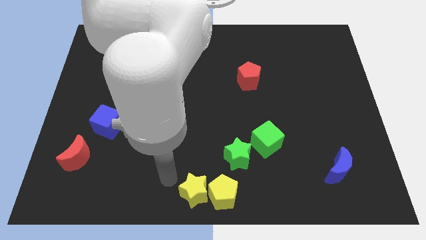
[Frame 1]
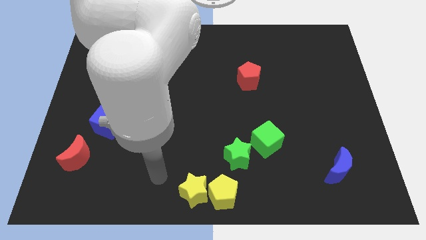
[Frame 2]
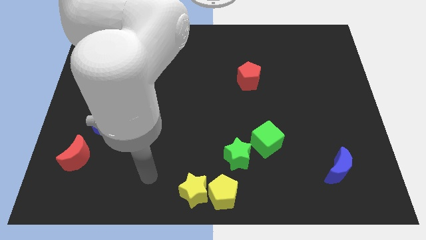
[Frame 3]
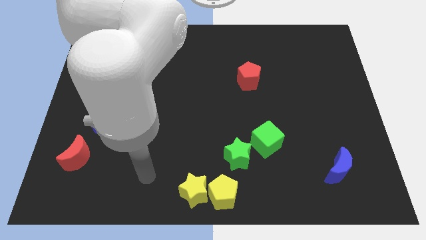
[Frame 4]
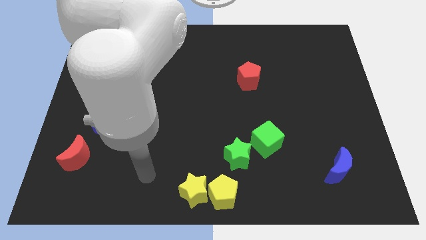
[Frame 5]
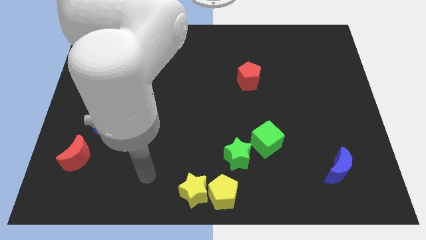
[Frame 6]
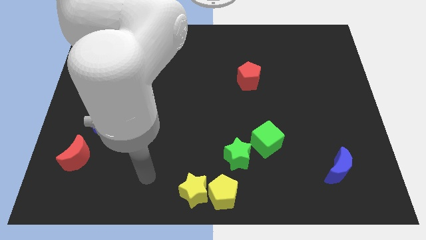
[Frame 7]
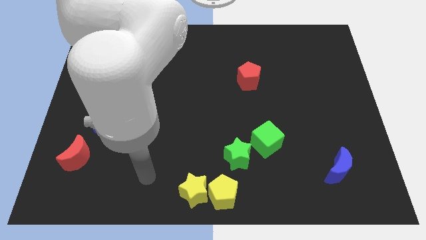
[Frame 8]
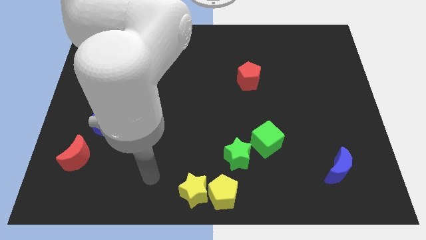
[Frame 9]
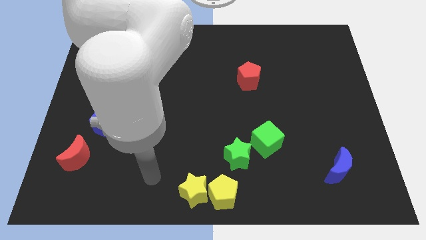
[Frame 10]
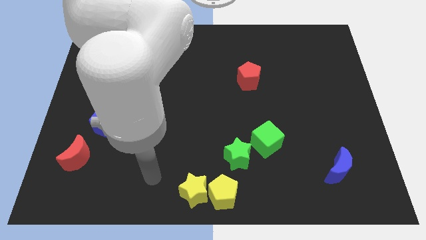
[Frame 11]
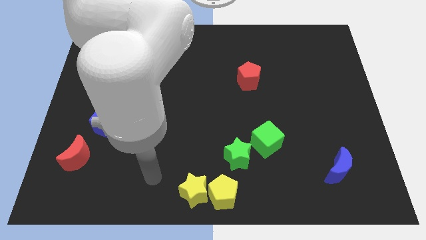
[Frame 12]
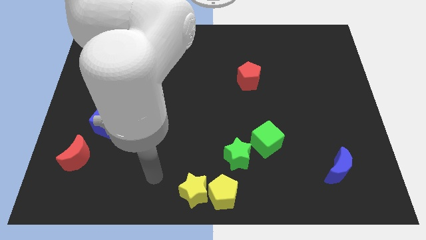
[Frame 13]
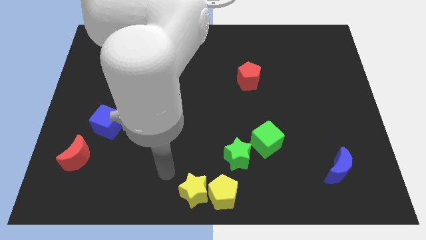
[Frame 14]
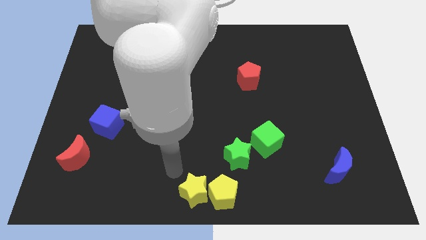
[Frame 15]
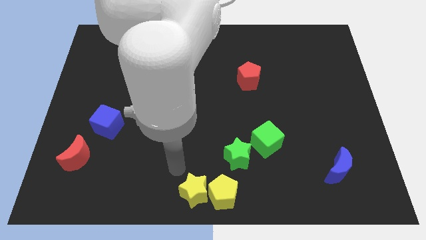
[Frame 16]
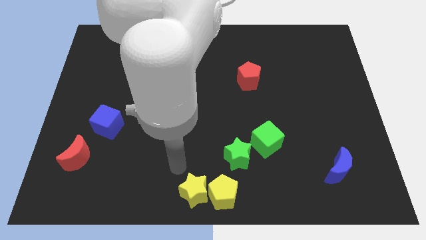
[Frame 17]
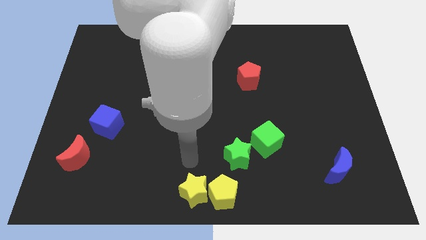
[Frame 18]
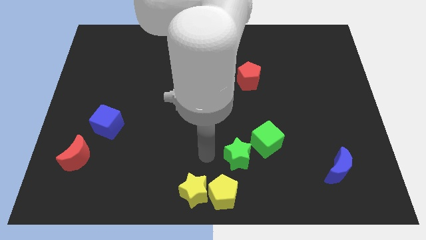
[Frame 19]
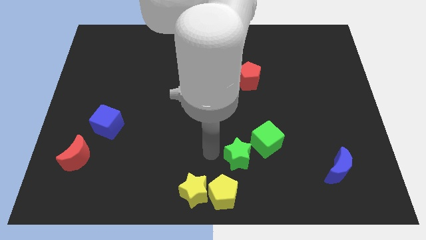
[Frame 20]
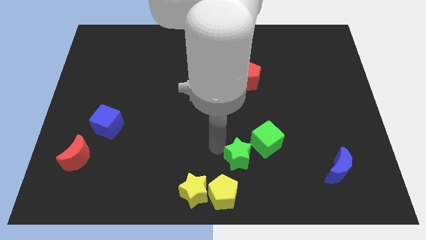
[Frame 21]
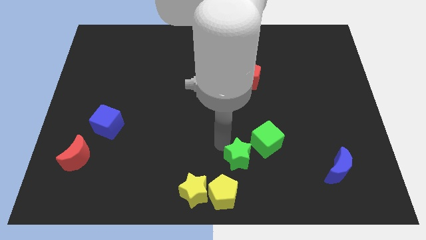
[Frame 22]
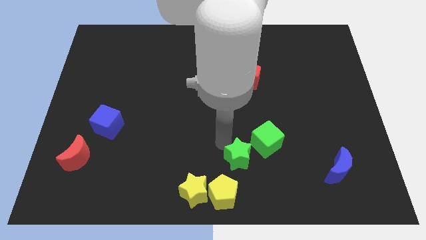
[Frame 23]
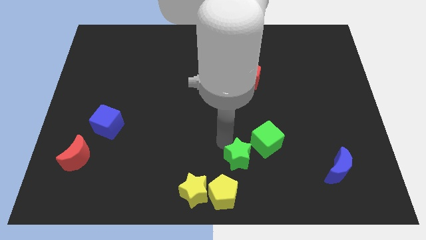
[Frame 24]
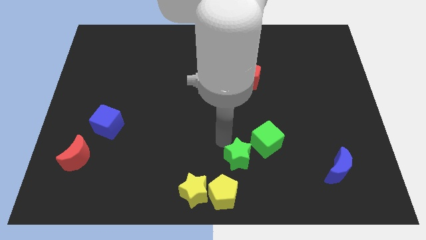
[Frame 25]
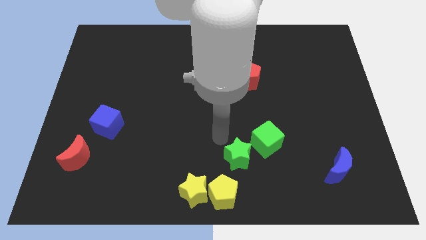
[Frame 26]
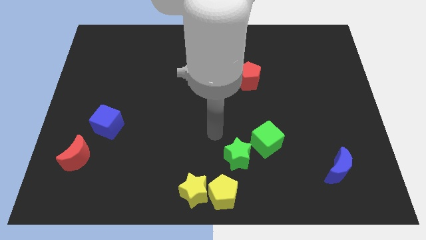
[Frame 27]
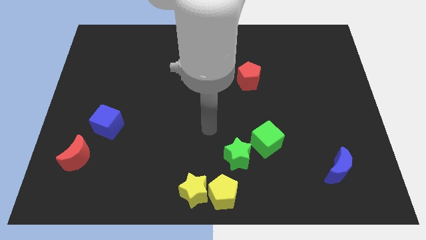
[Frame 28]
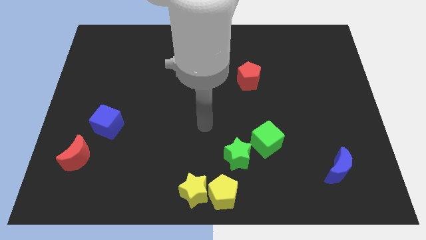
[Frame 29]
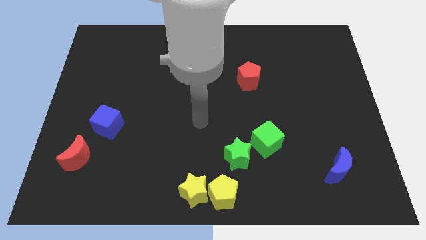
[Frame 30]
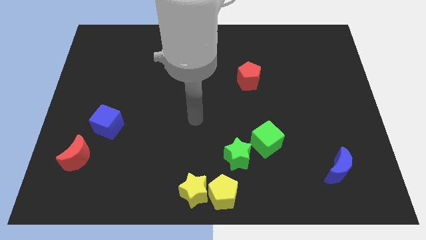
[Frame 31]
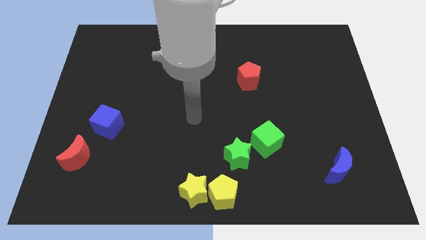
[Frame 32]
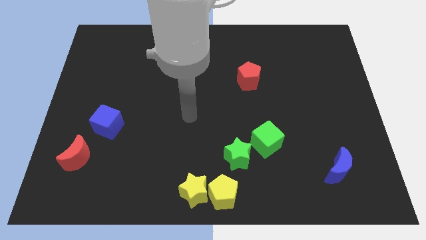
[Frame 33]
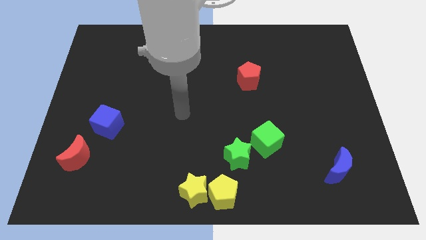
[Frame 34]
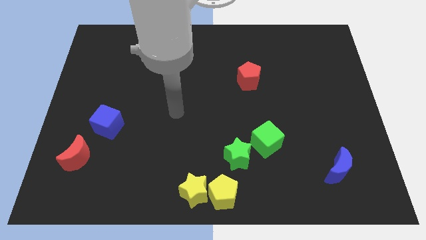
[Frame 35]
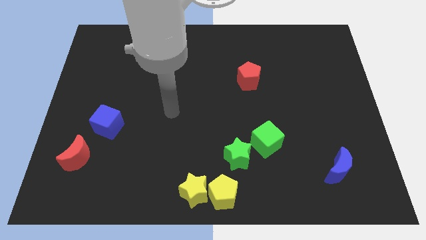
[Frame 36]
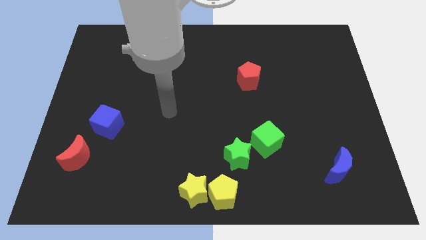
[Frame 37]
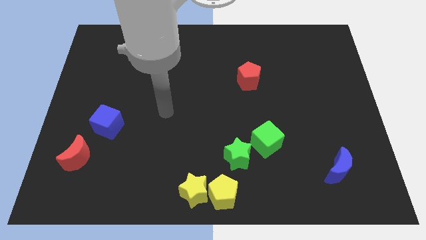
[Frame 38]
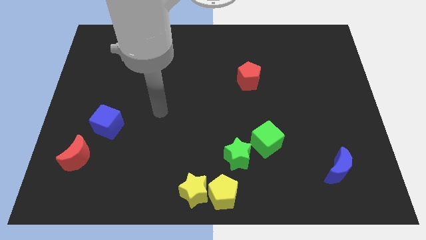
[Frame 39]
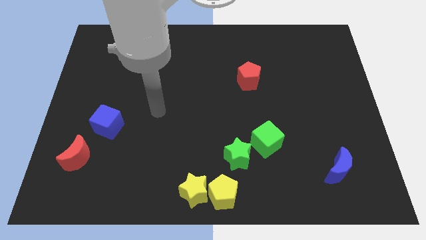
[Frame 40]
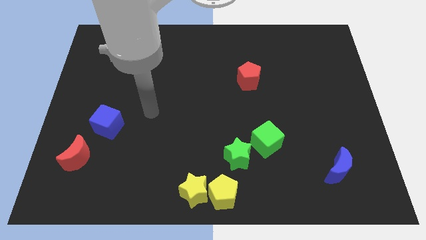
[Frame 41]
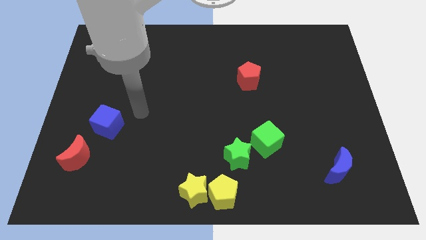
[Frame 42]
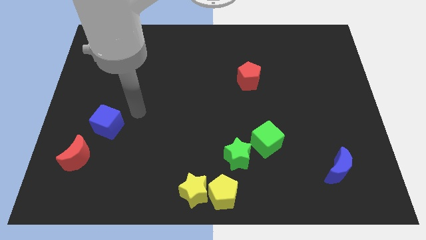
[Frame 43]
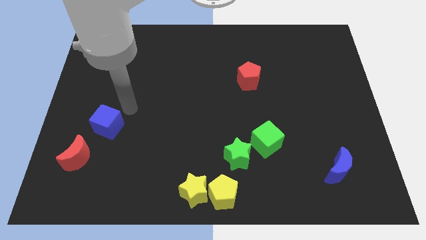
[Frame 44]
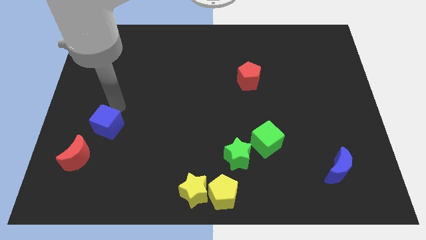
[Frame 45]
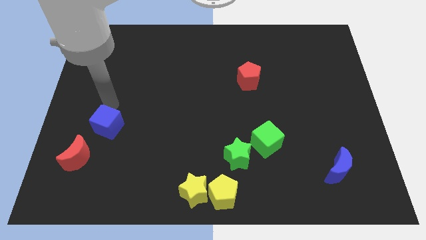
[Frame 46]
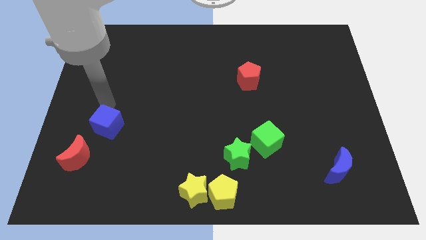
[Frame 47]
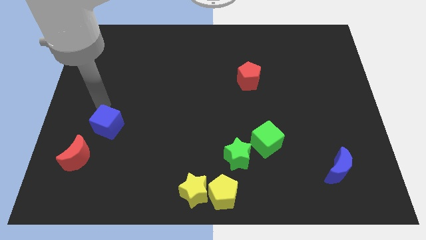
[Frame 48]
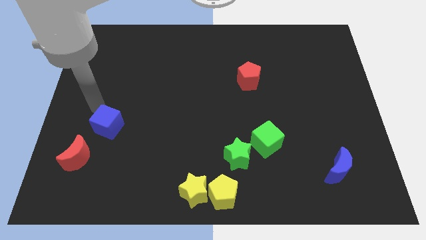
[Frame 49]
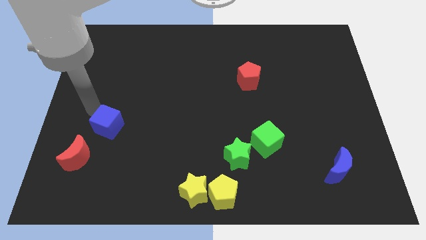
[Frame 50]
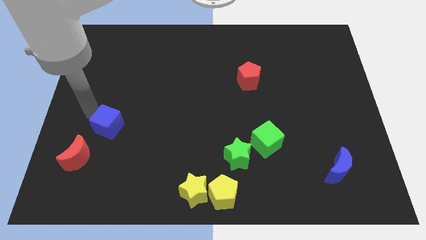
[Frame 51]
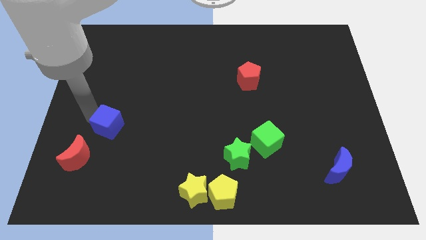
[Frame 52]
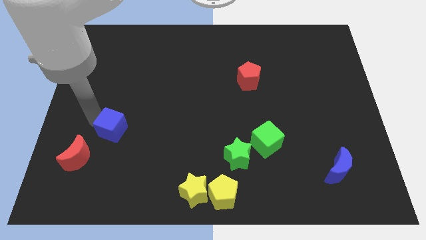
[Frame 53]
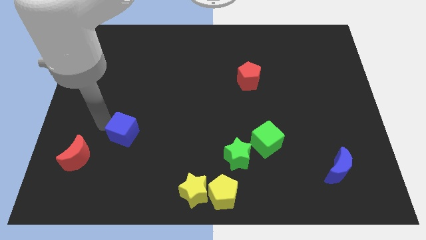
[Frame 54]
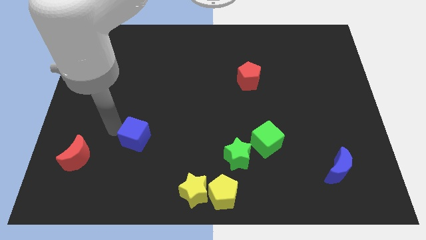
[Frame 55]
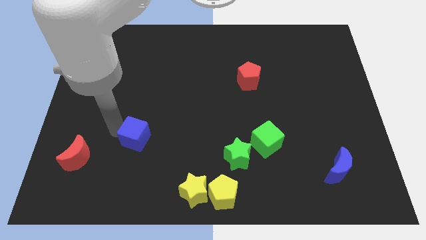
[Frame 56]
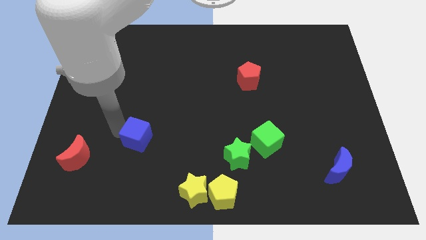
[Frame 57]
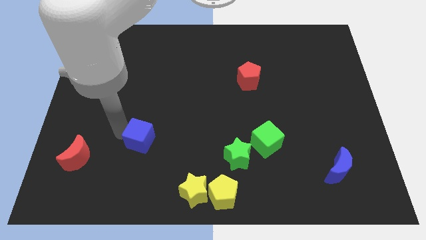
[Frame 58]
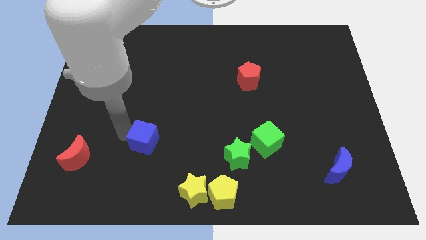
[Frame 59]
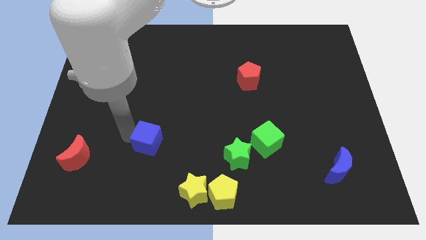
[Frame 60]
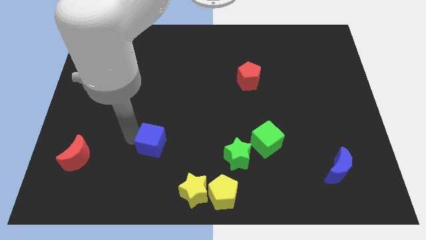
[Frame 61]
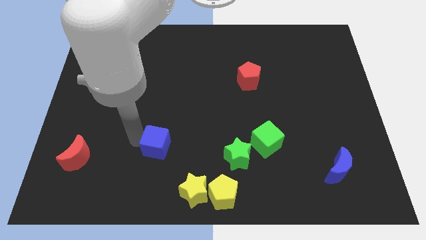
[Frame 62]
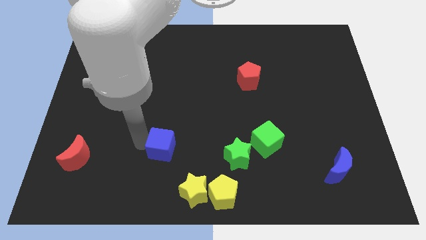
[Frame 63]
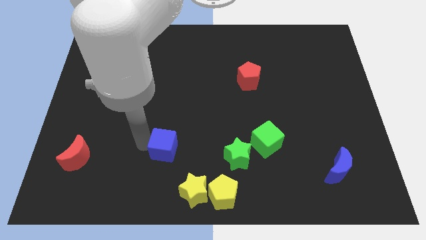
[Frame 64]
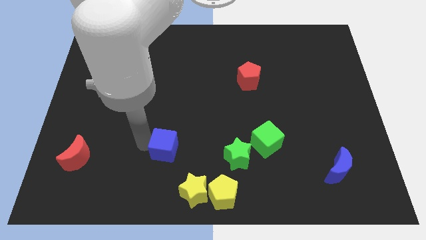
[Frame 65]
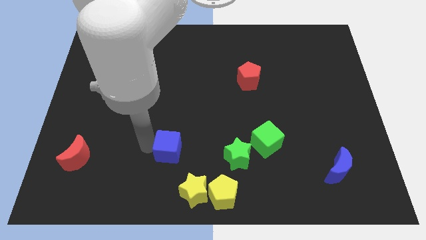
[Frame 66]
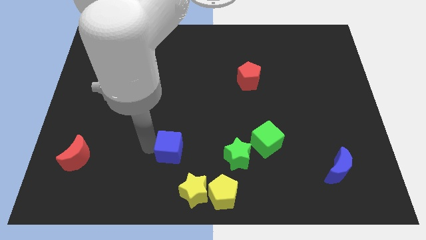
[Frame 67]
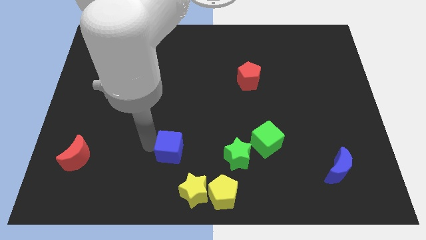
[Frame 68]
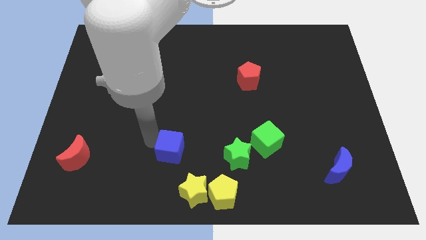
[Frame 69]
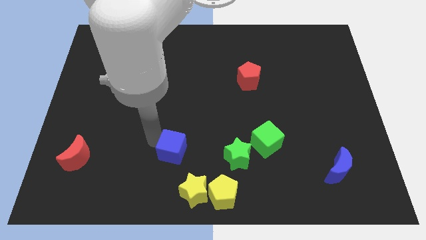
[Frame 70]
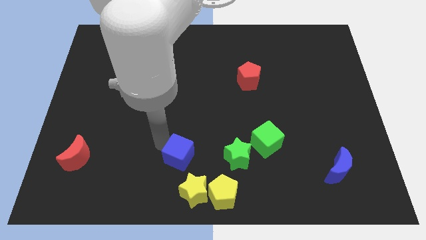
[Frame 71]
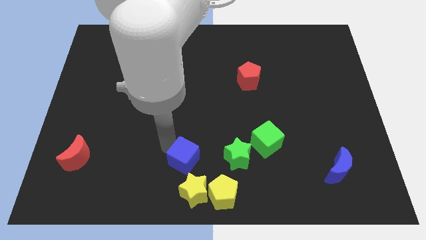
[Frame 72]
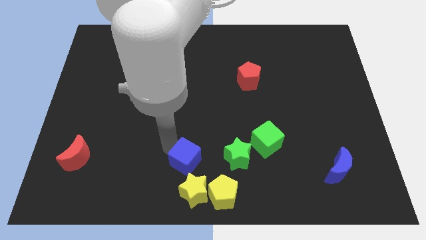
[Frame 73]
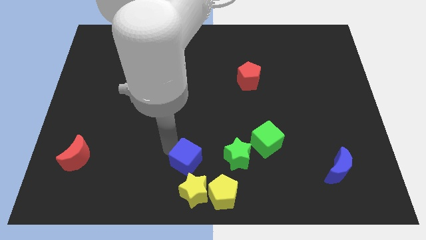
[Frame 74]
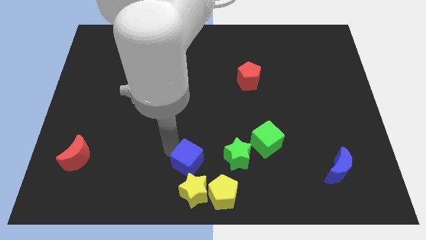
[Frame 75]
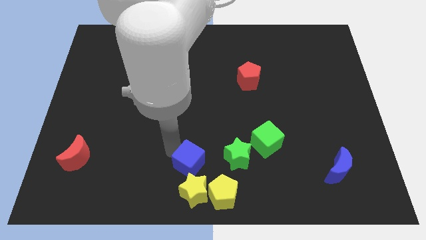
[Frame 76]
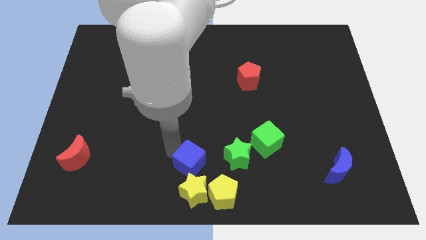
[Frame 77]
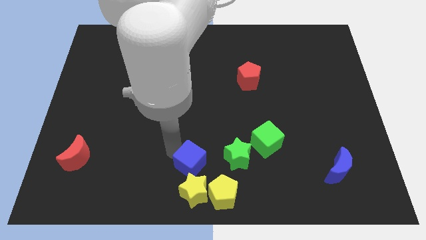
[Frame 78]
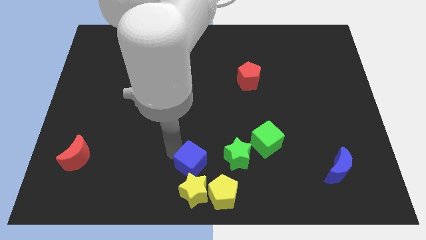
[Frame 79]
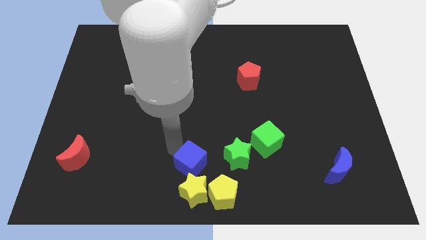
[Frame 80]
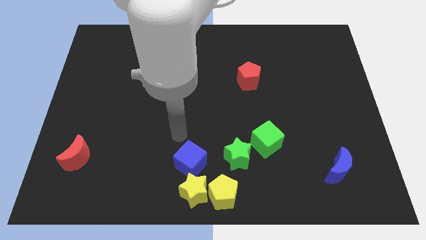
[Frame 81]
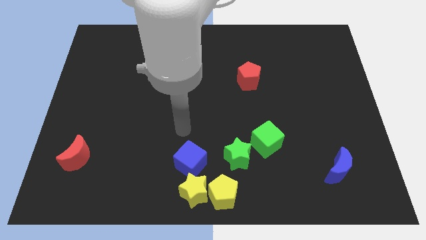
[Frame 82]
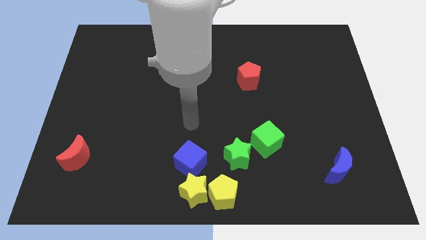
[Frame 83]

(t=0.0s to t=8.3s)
place the blue cube above the yellow star

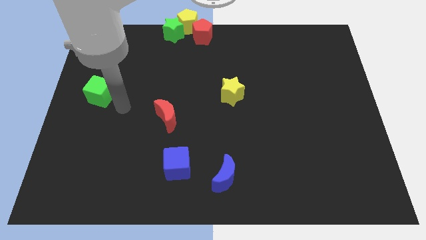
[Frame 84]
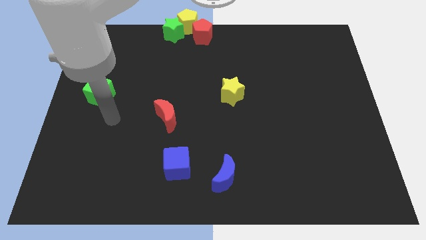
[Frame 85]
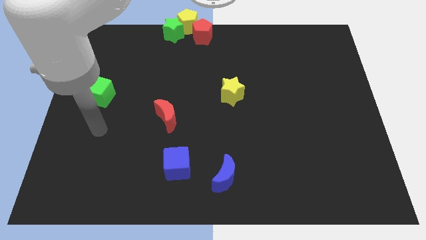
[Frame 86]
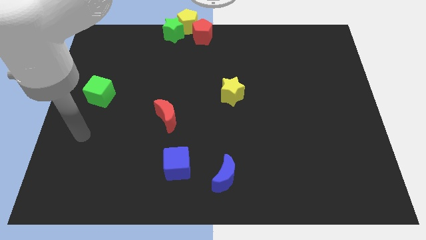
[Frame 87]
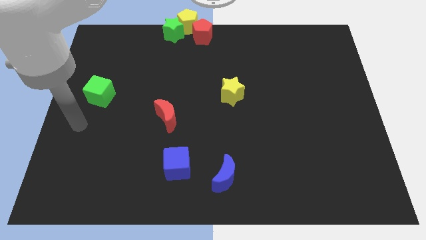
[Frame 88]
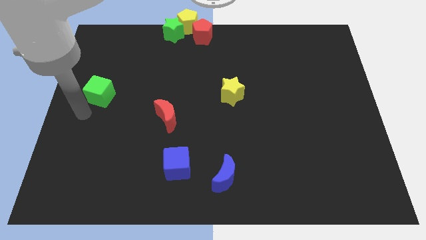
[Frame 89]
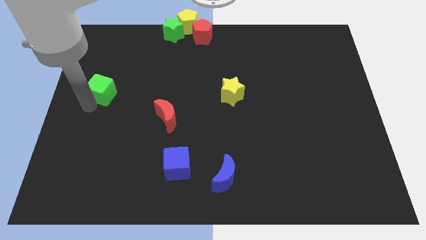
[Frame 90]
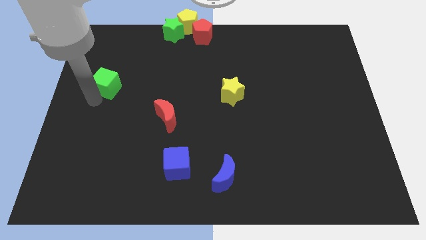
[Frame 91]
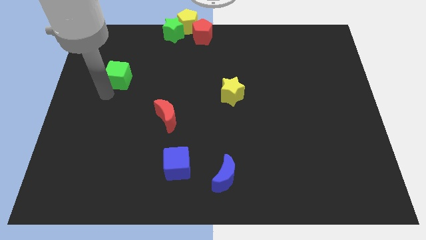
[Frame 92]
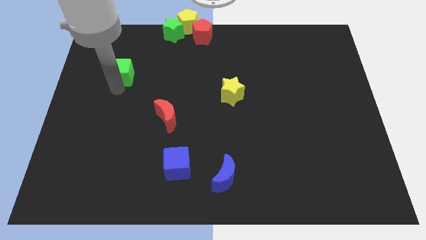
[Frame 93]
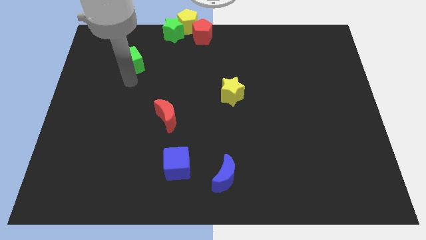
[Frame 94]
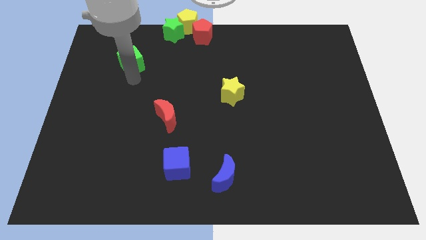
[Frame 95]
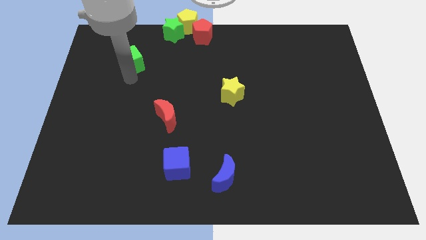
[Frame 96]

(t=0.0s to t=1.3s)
push the green cube to the top left of the red crescent
